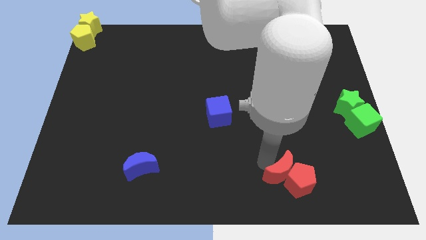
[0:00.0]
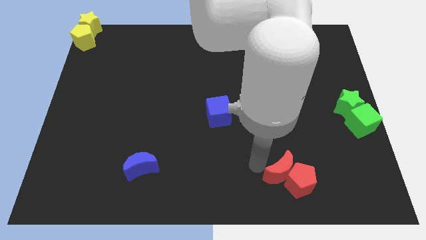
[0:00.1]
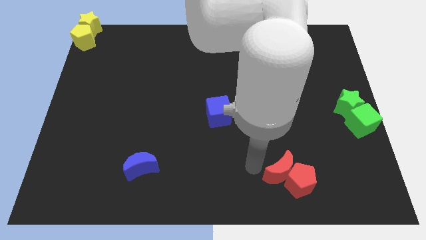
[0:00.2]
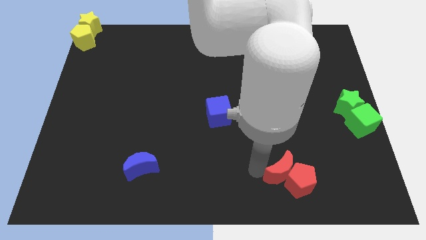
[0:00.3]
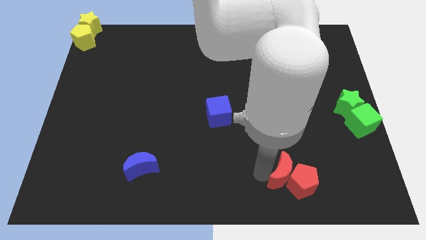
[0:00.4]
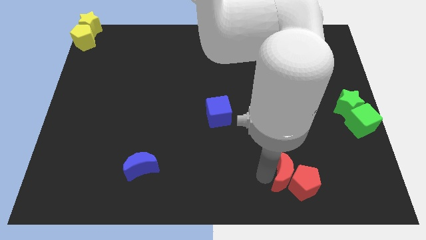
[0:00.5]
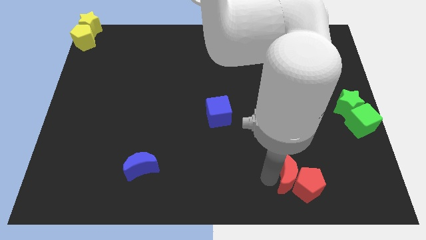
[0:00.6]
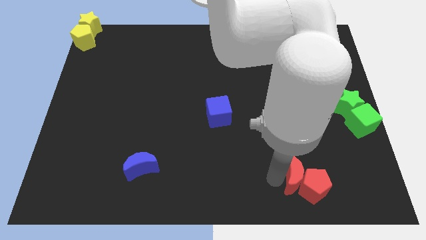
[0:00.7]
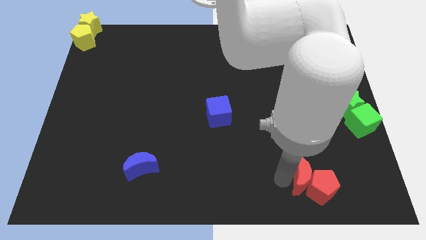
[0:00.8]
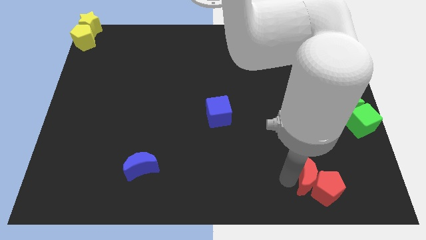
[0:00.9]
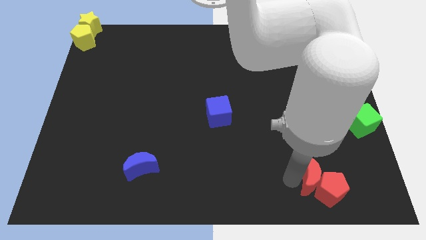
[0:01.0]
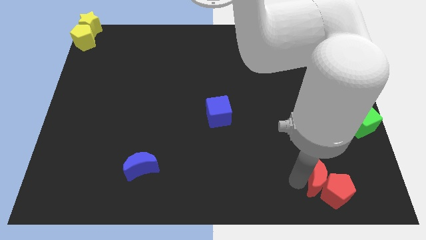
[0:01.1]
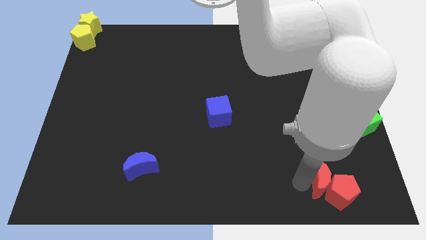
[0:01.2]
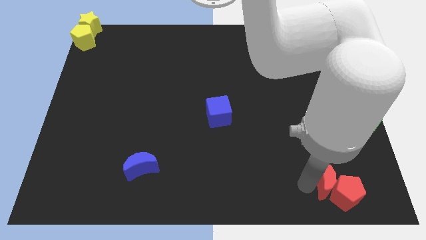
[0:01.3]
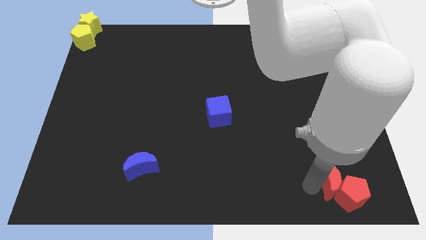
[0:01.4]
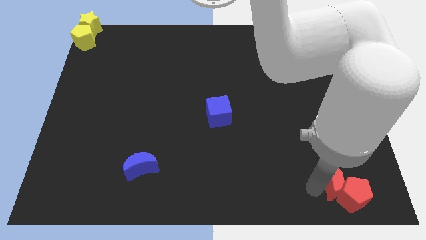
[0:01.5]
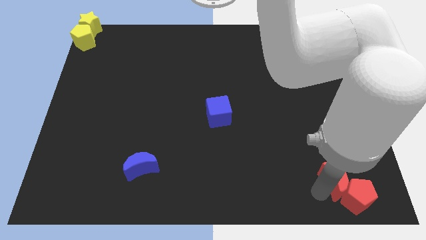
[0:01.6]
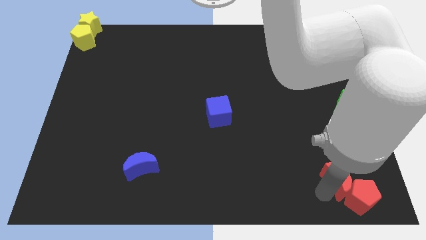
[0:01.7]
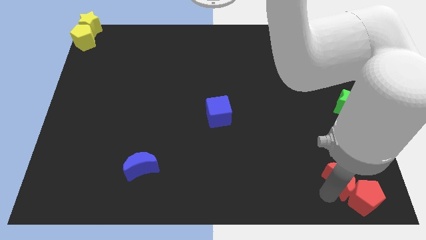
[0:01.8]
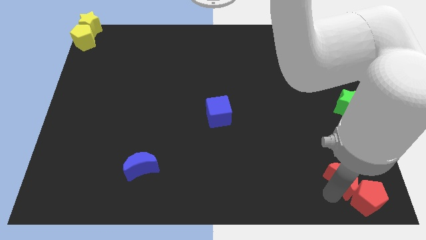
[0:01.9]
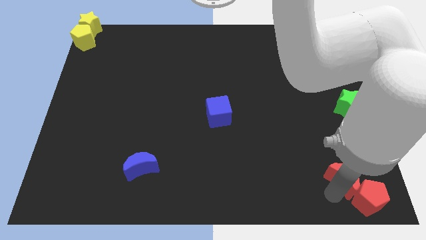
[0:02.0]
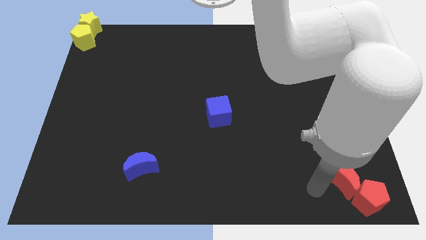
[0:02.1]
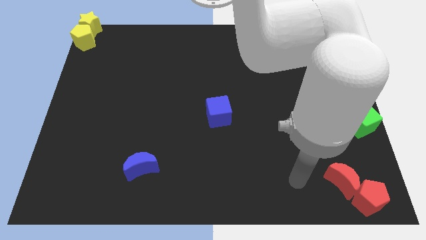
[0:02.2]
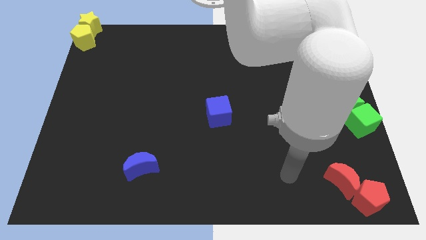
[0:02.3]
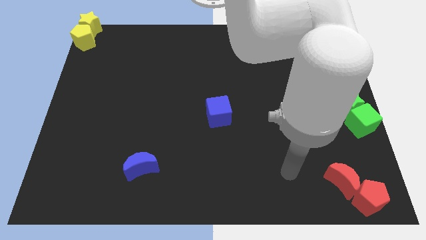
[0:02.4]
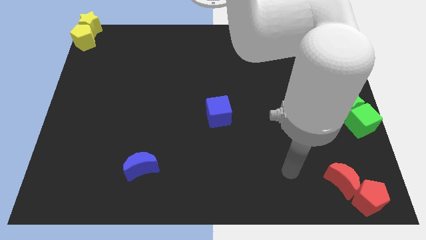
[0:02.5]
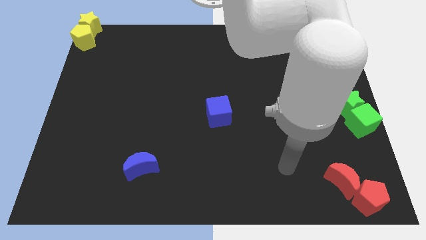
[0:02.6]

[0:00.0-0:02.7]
push red pentagon with the help of red crescent towards bottom right end

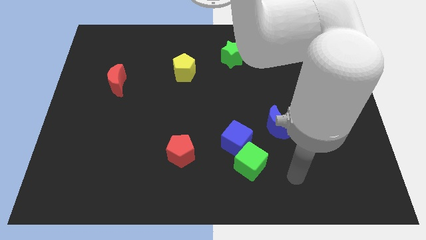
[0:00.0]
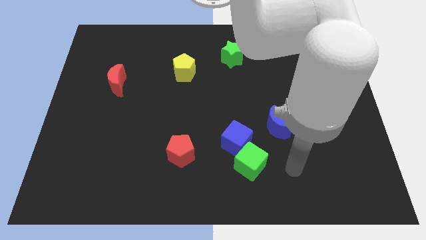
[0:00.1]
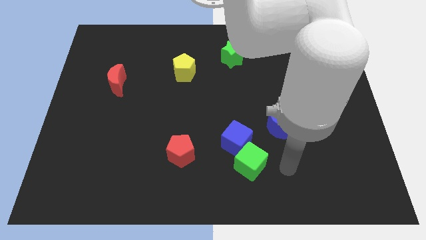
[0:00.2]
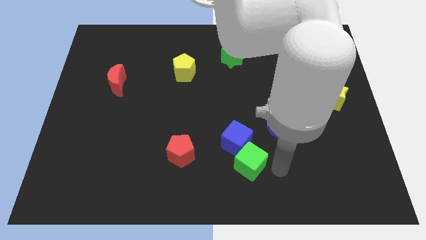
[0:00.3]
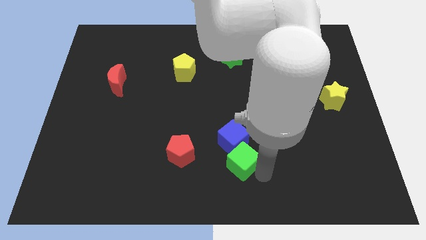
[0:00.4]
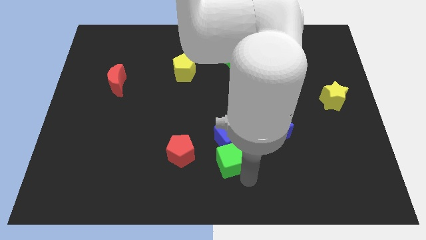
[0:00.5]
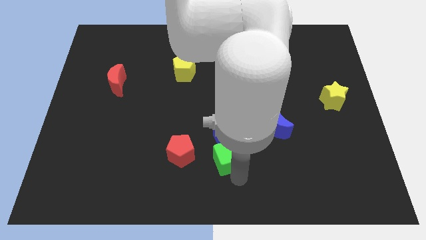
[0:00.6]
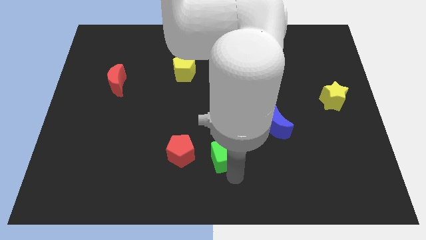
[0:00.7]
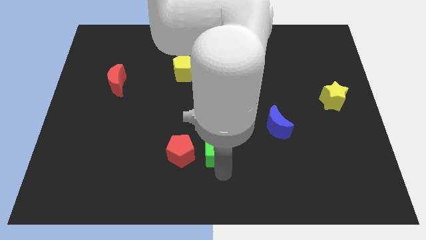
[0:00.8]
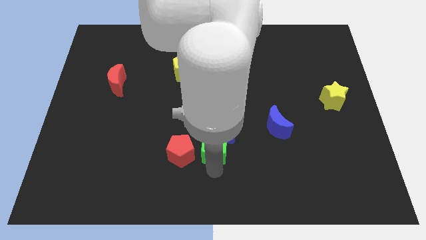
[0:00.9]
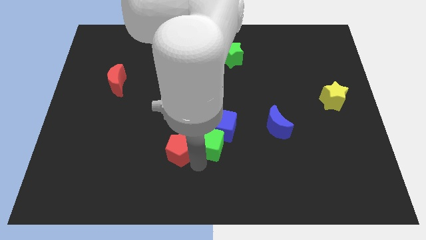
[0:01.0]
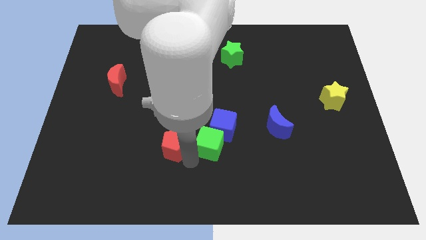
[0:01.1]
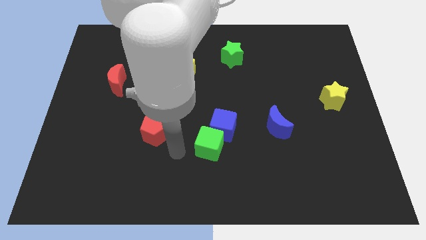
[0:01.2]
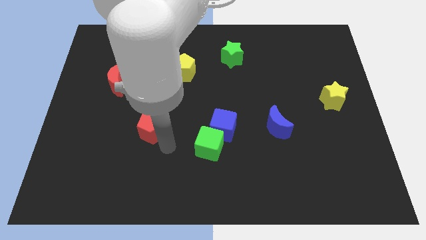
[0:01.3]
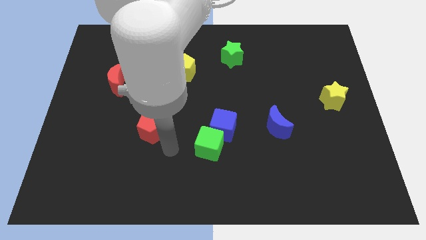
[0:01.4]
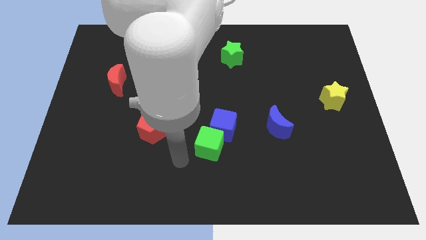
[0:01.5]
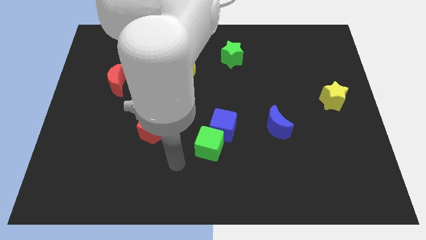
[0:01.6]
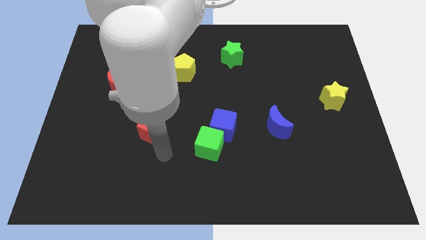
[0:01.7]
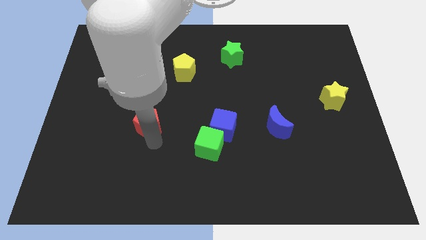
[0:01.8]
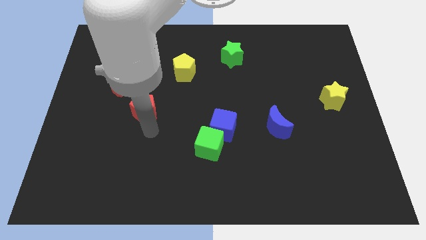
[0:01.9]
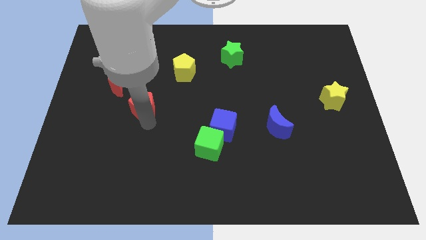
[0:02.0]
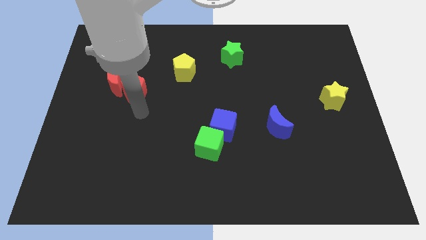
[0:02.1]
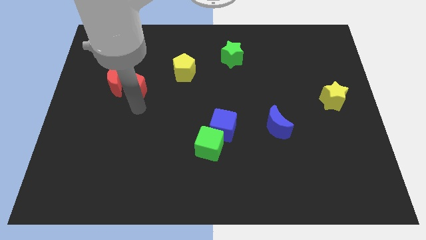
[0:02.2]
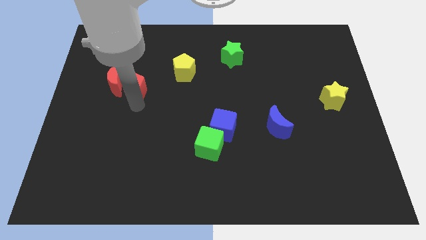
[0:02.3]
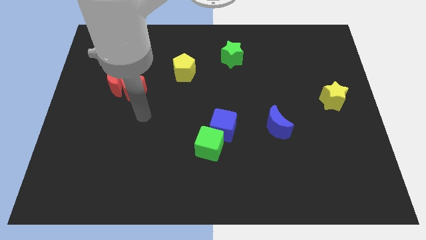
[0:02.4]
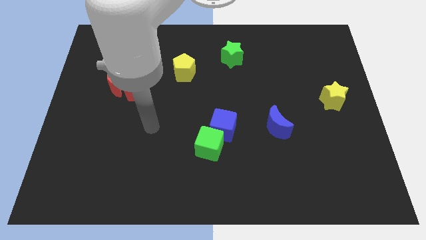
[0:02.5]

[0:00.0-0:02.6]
push the cubes and red pentagon into red moon

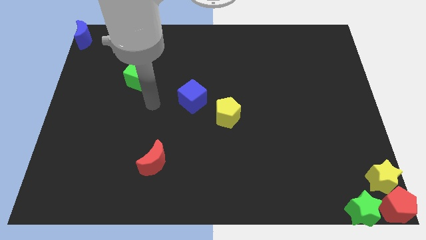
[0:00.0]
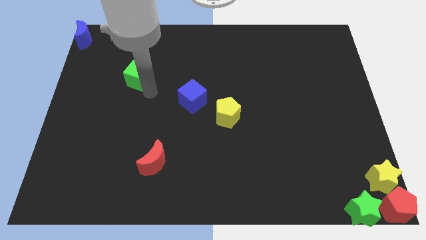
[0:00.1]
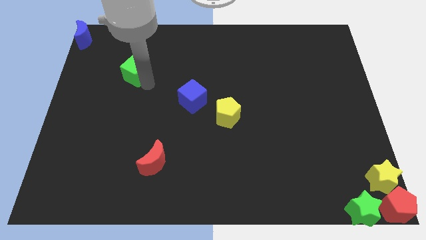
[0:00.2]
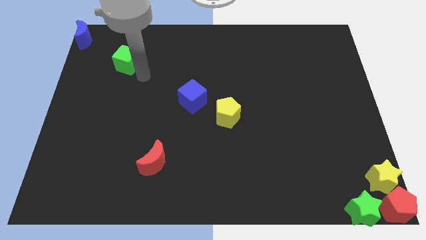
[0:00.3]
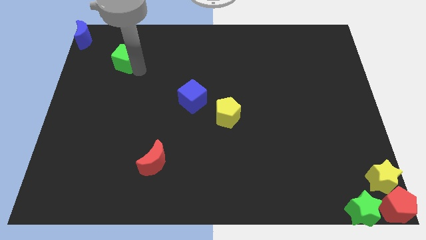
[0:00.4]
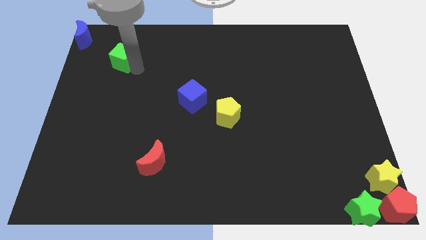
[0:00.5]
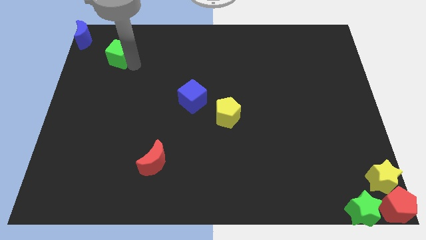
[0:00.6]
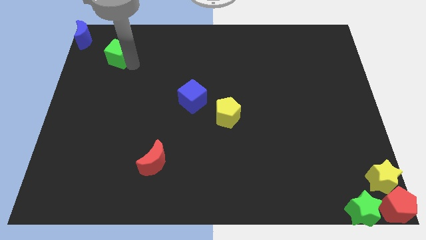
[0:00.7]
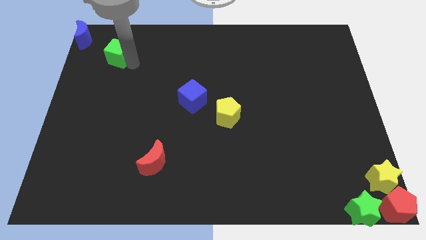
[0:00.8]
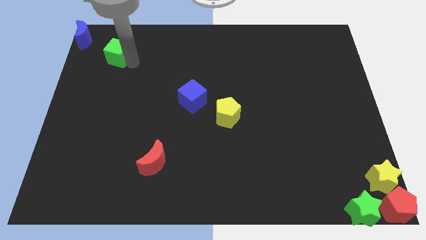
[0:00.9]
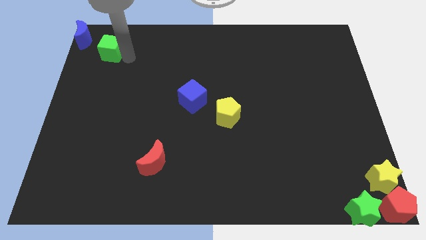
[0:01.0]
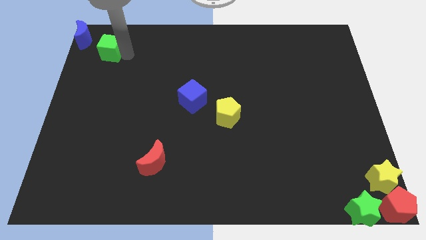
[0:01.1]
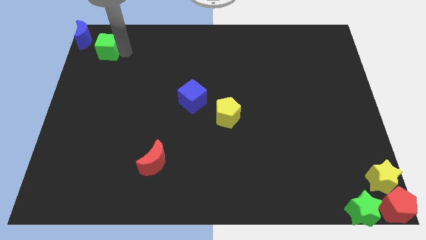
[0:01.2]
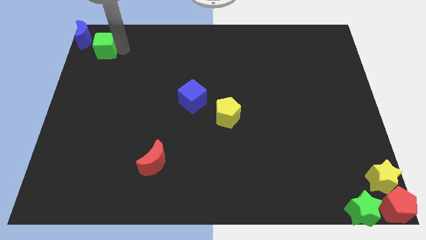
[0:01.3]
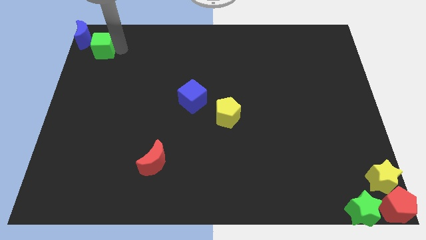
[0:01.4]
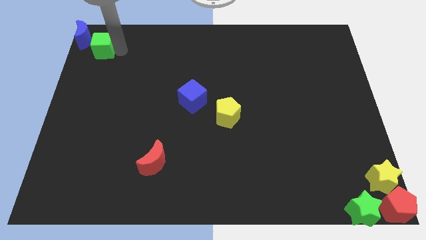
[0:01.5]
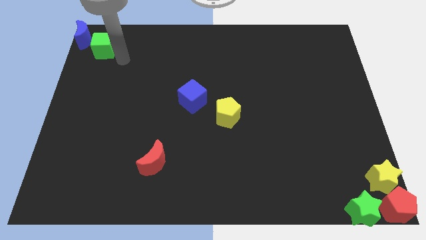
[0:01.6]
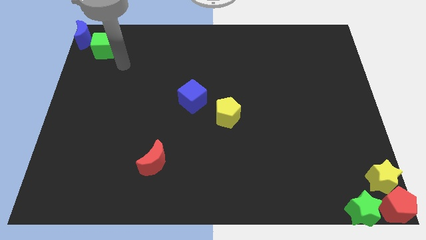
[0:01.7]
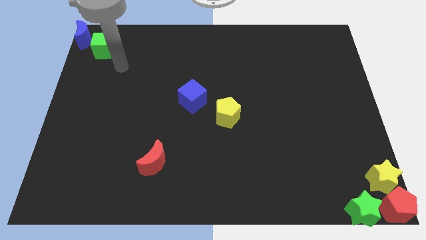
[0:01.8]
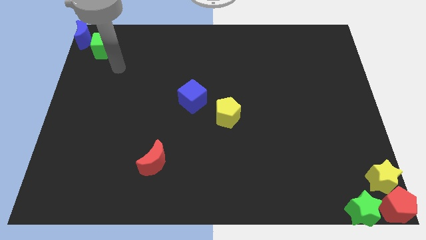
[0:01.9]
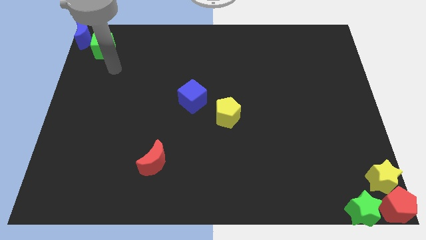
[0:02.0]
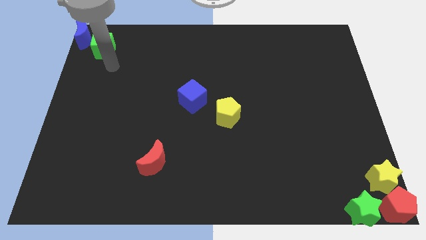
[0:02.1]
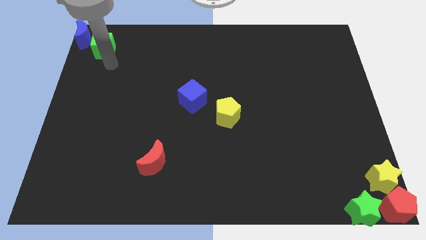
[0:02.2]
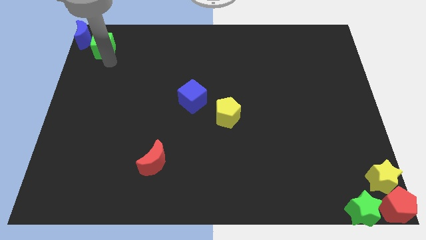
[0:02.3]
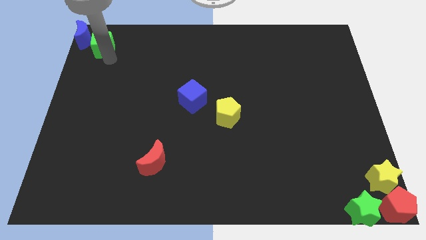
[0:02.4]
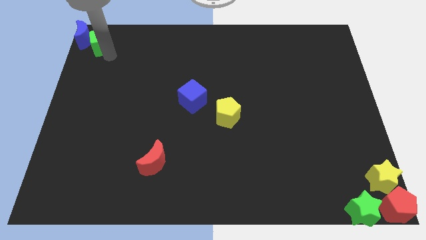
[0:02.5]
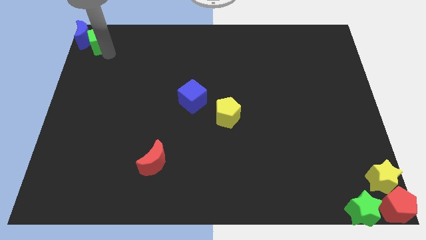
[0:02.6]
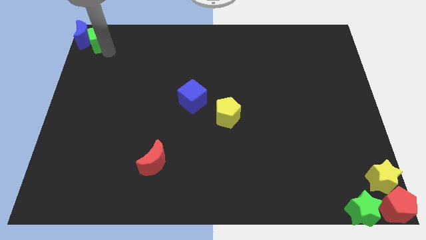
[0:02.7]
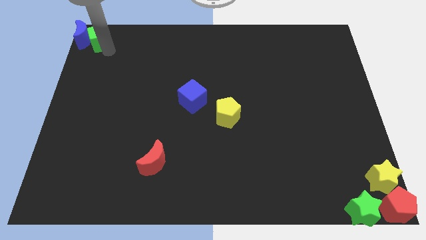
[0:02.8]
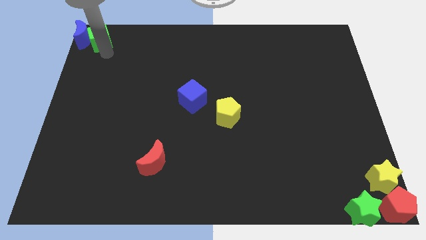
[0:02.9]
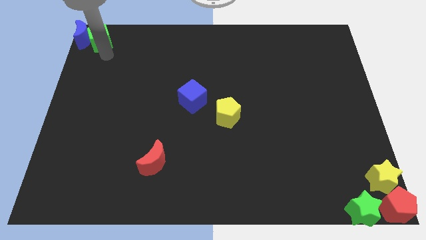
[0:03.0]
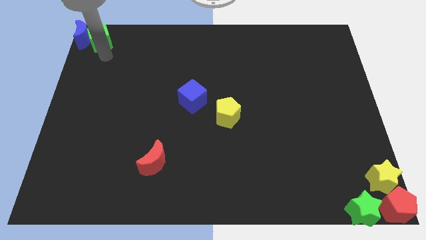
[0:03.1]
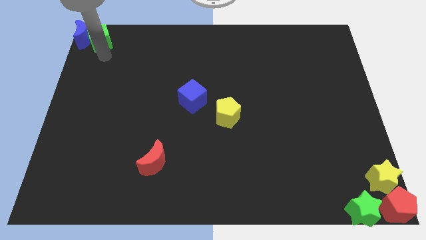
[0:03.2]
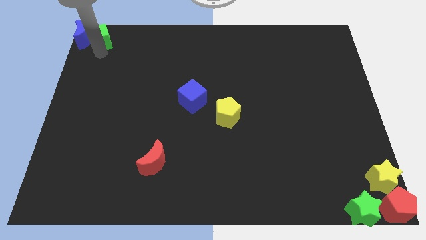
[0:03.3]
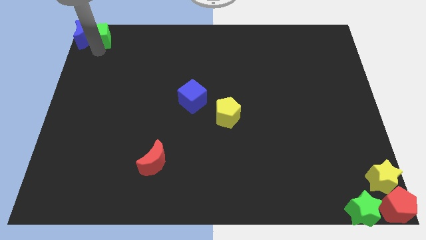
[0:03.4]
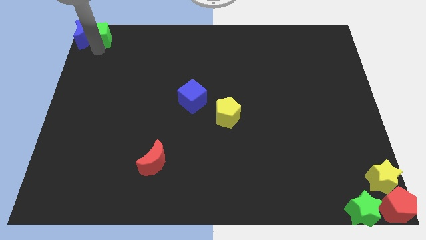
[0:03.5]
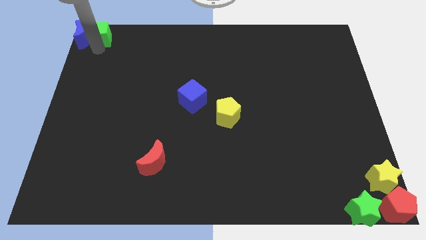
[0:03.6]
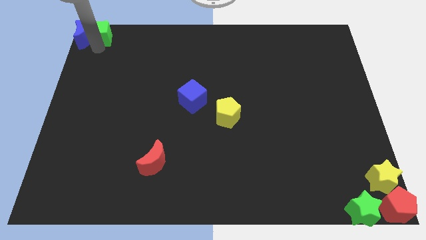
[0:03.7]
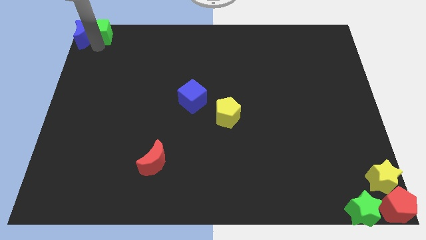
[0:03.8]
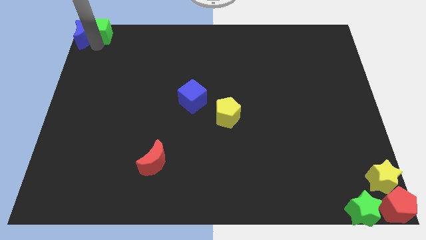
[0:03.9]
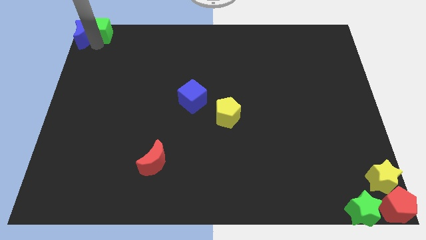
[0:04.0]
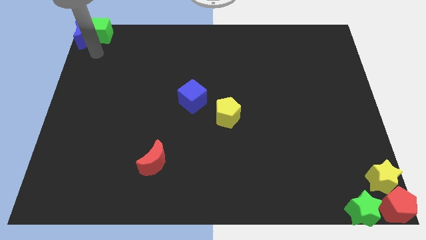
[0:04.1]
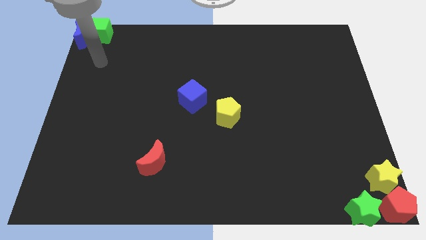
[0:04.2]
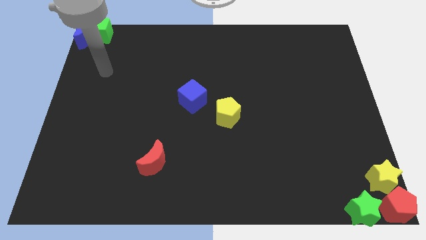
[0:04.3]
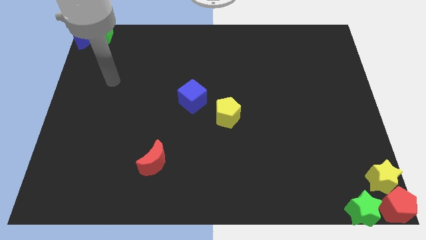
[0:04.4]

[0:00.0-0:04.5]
move the green cube to the right of the blue moon
